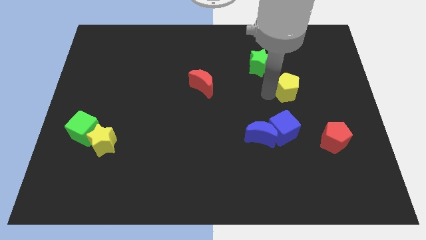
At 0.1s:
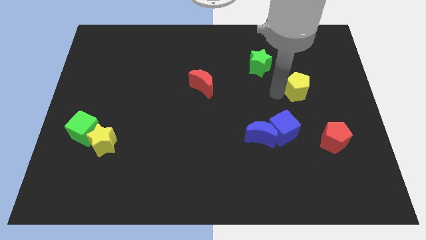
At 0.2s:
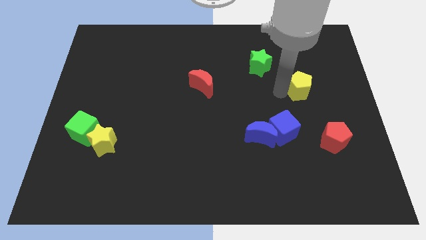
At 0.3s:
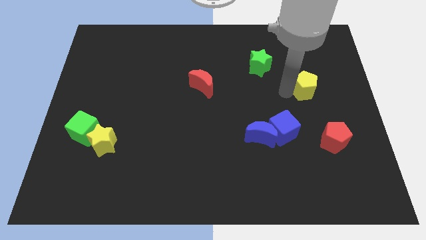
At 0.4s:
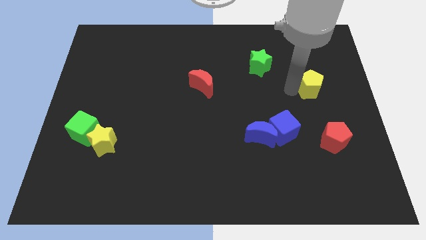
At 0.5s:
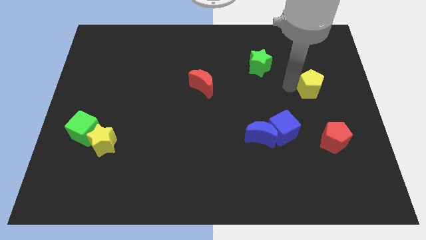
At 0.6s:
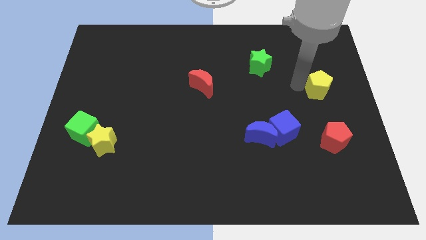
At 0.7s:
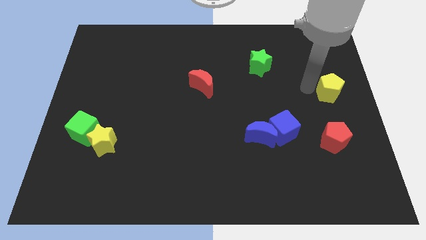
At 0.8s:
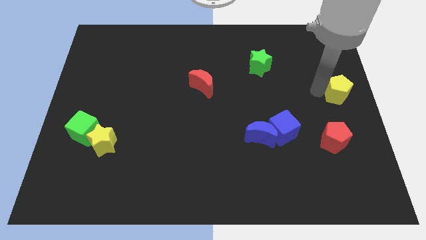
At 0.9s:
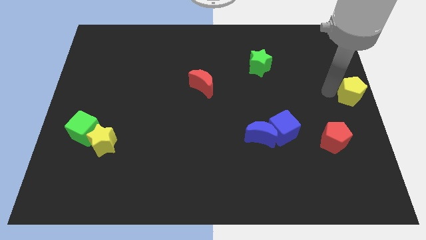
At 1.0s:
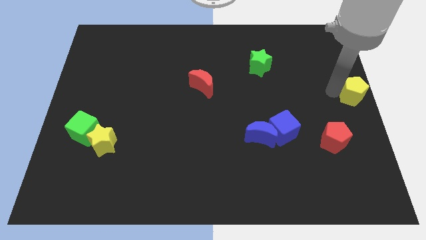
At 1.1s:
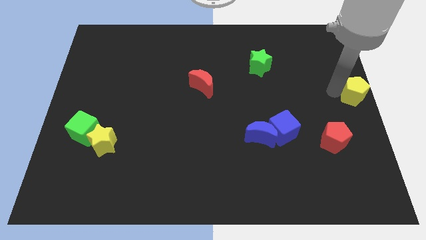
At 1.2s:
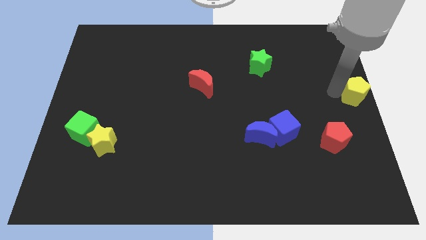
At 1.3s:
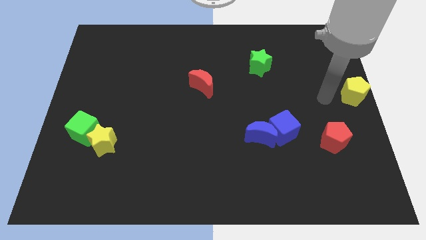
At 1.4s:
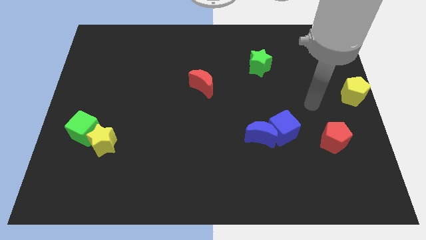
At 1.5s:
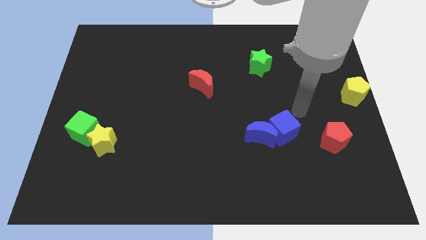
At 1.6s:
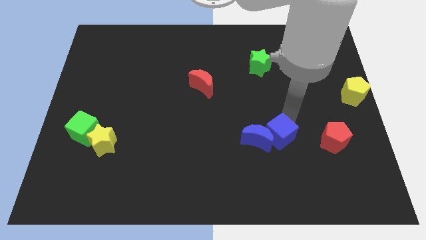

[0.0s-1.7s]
place the yellow pentagon towards the right center of the board

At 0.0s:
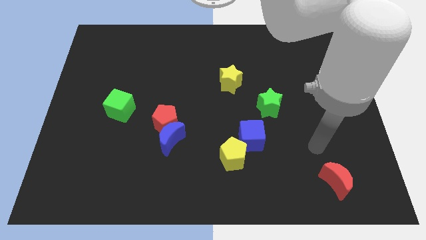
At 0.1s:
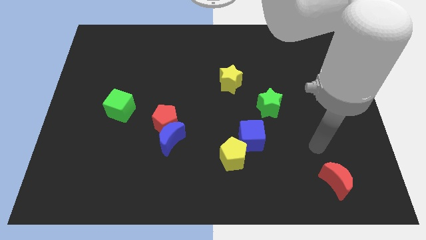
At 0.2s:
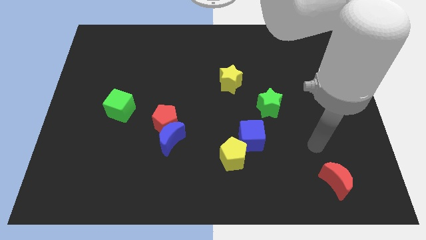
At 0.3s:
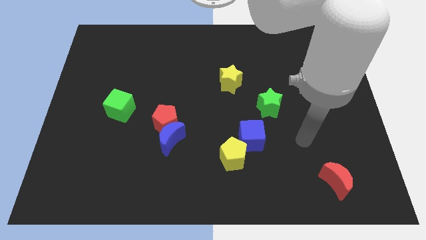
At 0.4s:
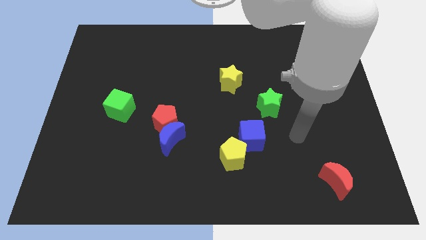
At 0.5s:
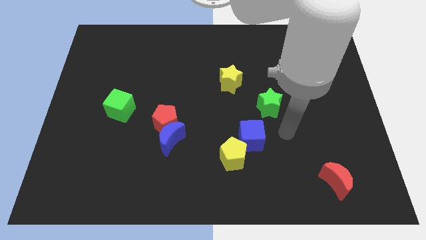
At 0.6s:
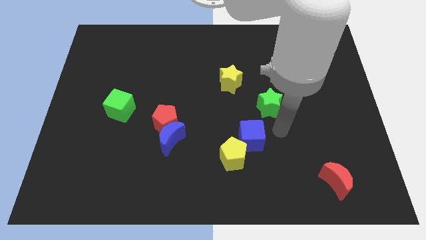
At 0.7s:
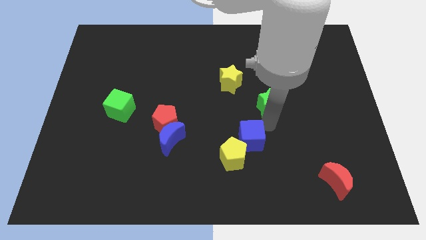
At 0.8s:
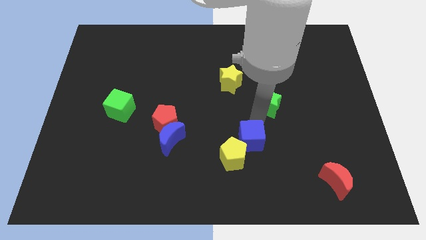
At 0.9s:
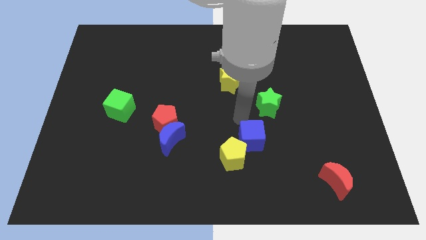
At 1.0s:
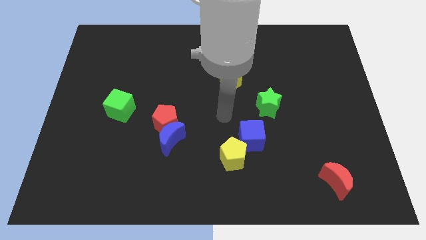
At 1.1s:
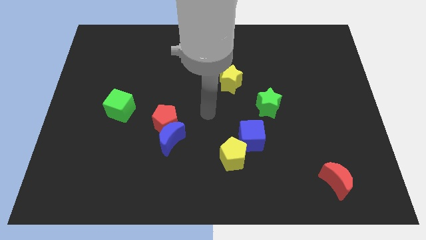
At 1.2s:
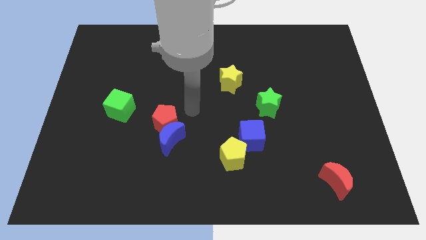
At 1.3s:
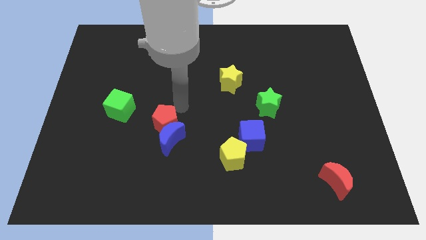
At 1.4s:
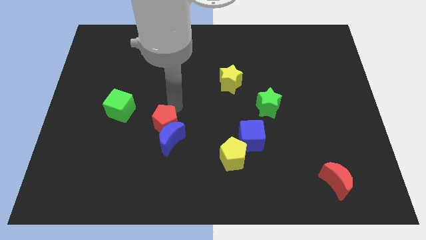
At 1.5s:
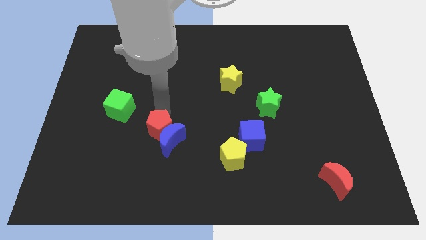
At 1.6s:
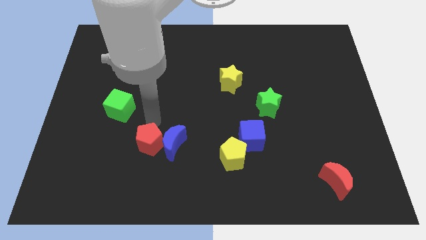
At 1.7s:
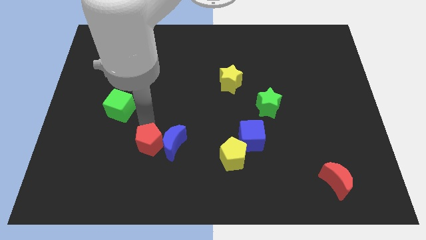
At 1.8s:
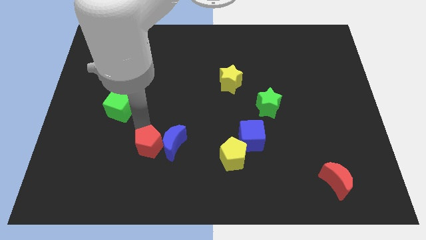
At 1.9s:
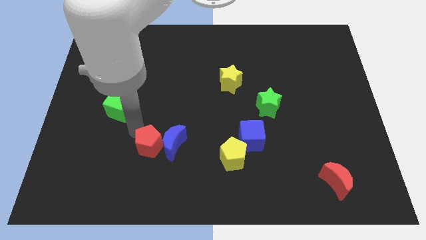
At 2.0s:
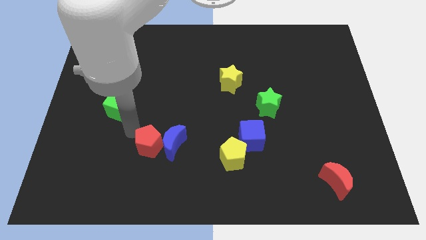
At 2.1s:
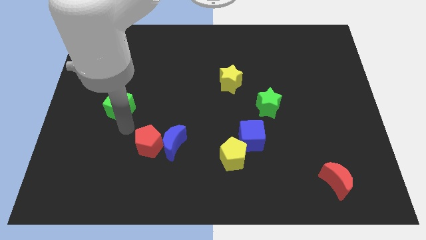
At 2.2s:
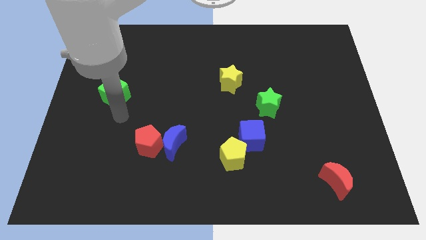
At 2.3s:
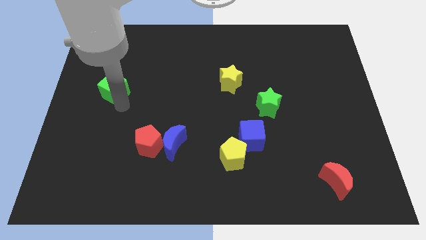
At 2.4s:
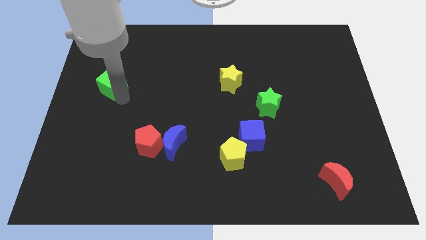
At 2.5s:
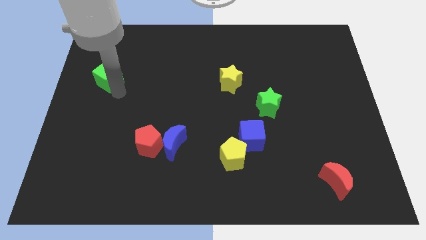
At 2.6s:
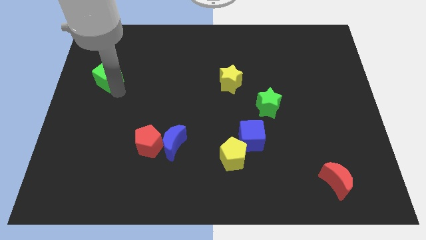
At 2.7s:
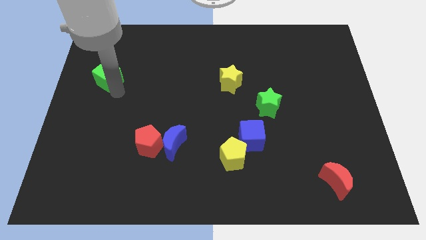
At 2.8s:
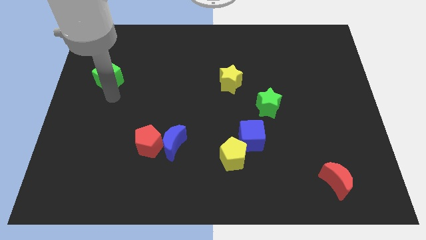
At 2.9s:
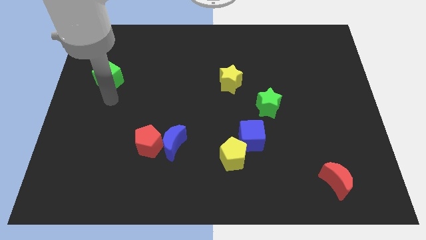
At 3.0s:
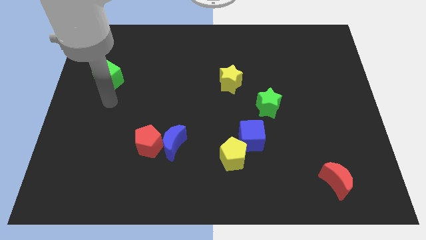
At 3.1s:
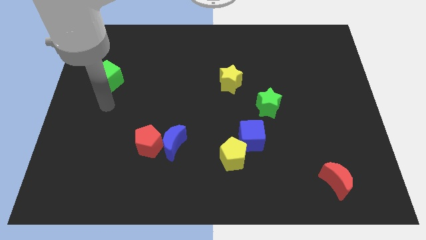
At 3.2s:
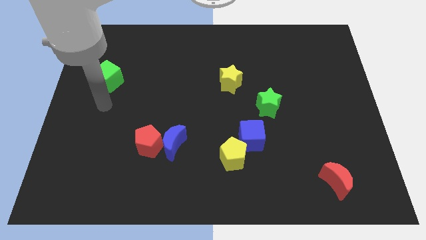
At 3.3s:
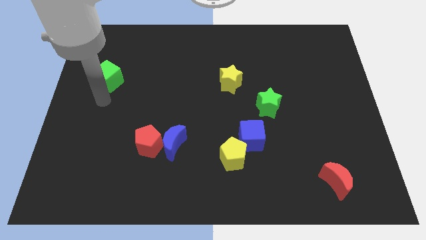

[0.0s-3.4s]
push the red pentagon slightly downwards

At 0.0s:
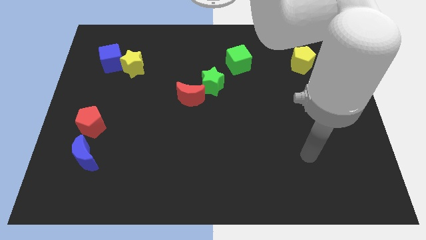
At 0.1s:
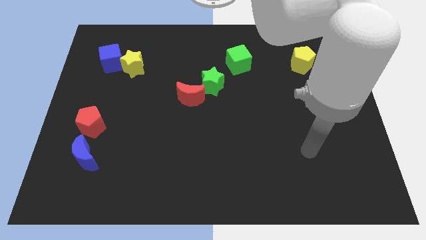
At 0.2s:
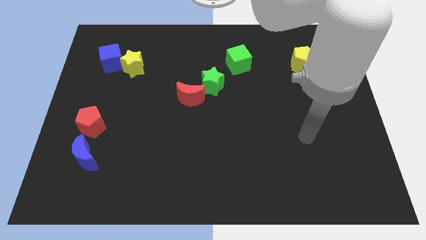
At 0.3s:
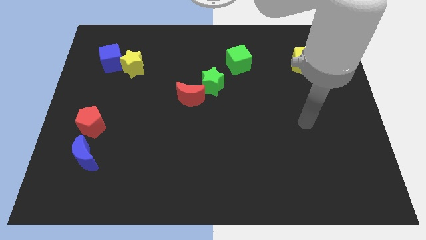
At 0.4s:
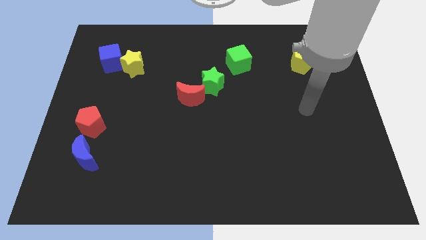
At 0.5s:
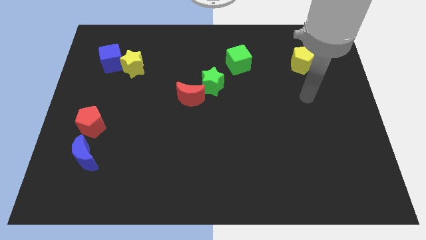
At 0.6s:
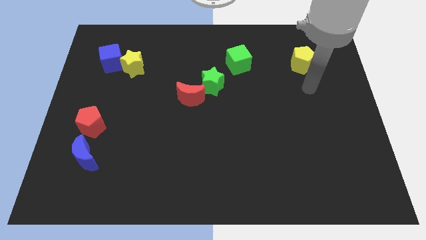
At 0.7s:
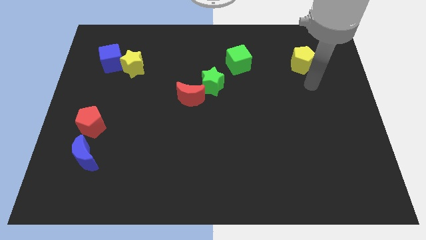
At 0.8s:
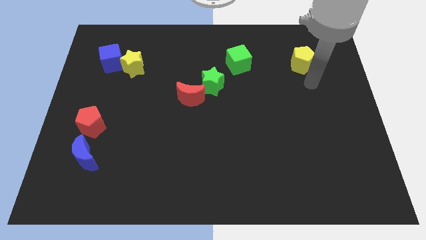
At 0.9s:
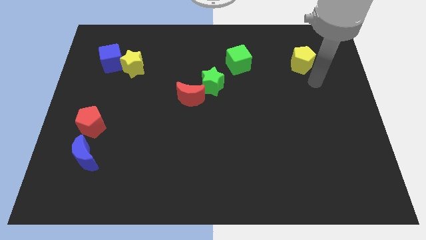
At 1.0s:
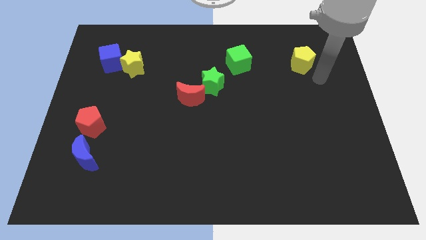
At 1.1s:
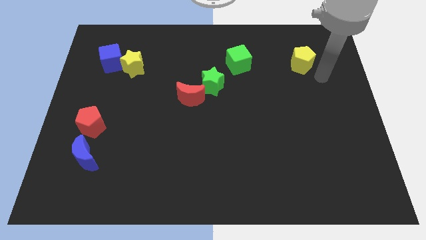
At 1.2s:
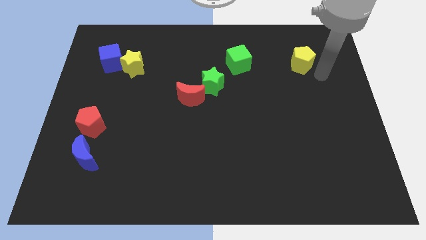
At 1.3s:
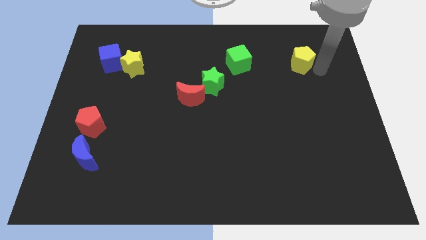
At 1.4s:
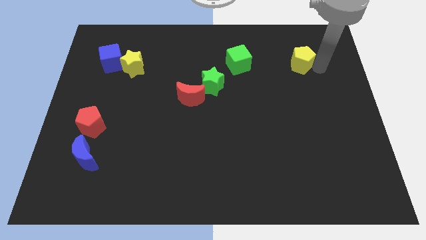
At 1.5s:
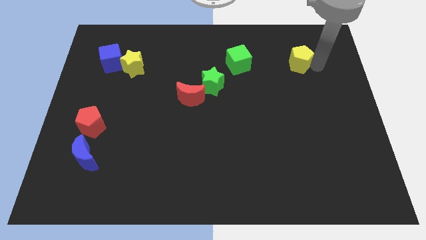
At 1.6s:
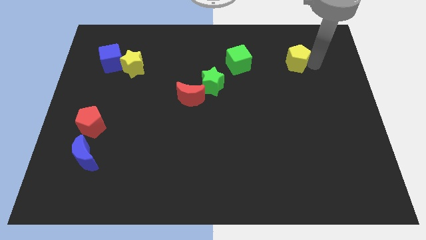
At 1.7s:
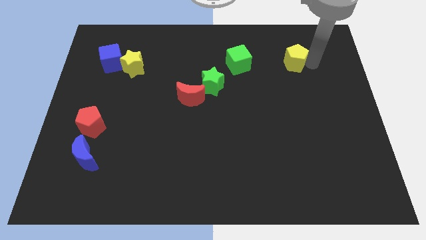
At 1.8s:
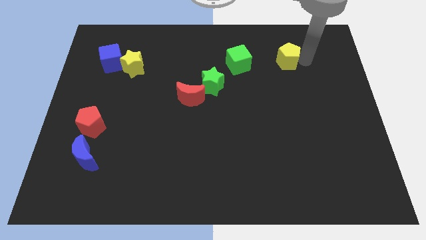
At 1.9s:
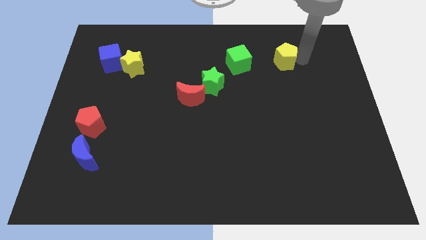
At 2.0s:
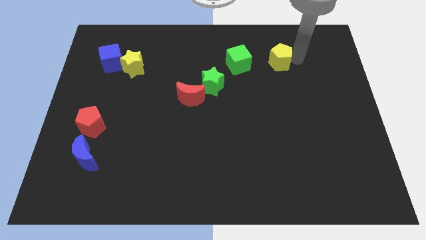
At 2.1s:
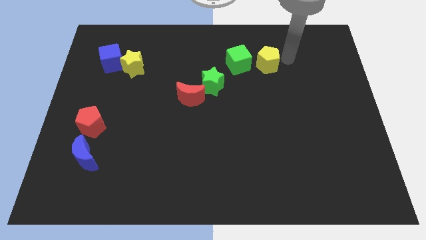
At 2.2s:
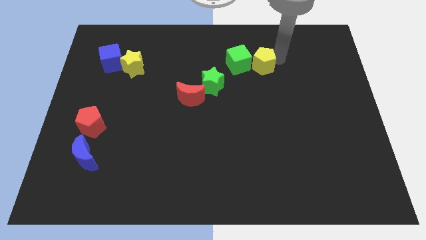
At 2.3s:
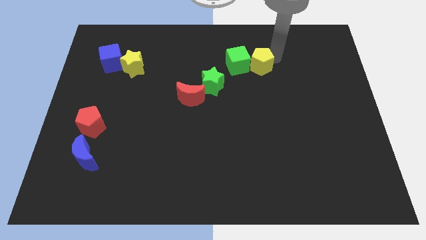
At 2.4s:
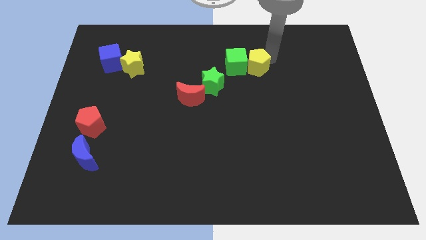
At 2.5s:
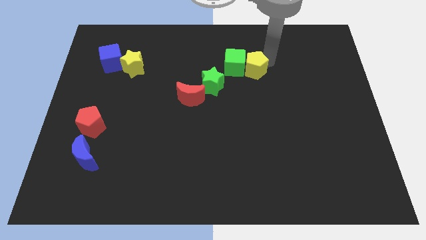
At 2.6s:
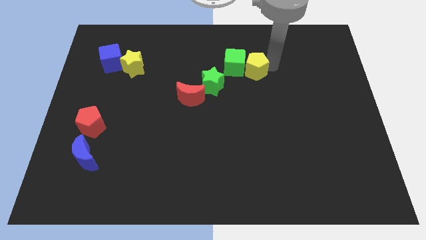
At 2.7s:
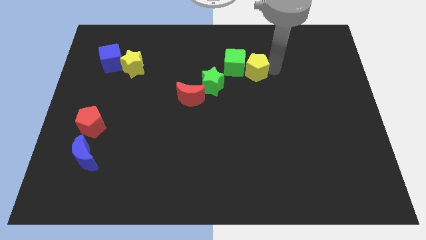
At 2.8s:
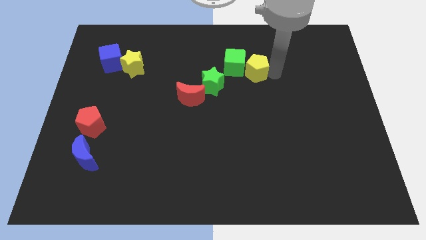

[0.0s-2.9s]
push the yellow pentagon into the green cube

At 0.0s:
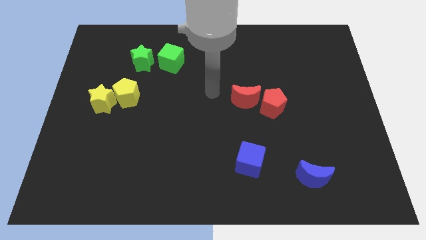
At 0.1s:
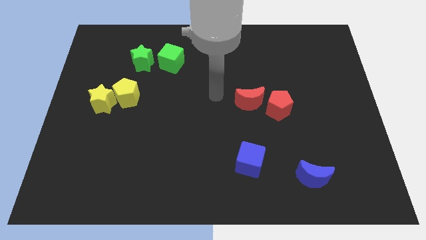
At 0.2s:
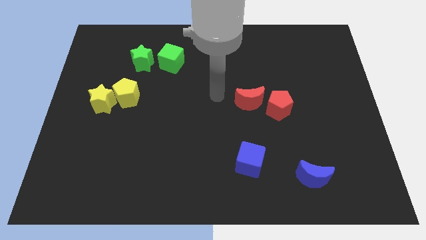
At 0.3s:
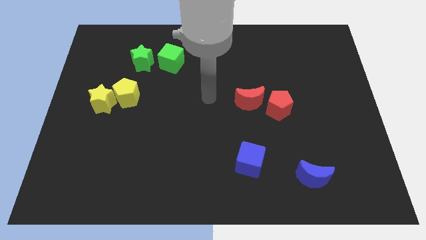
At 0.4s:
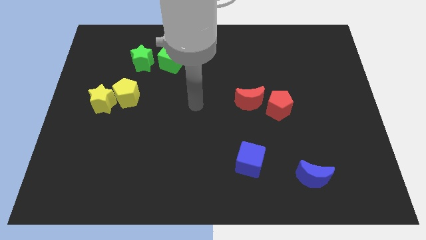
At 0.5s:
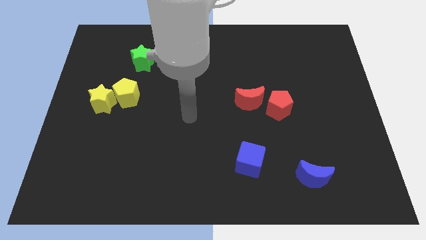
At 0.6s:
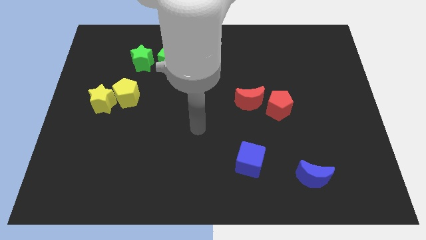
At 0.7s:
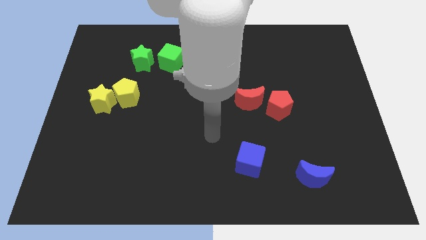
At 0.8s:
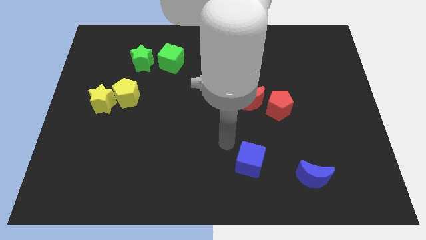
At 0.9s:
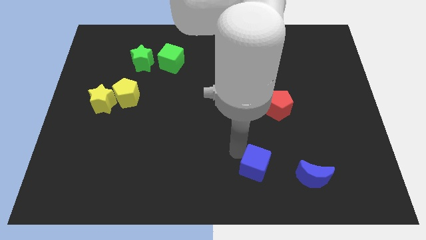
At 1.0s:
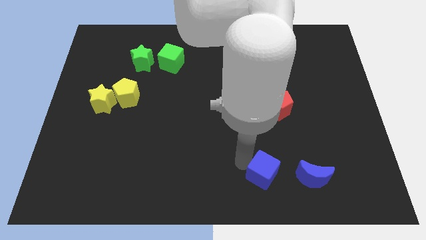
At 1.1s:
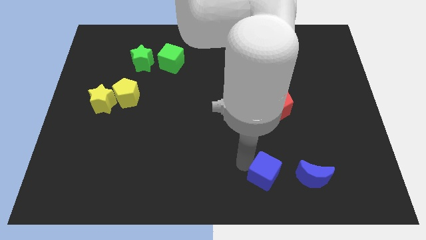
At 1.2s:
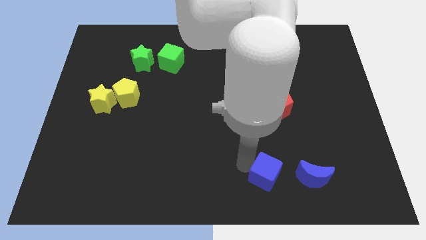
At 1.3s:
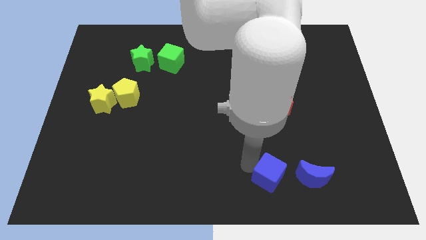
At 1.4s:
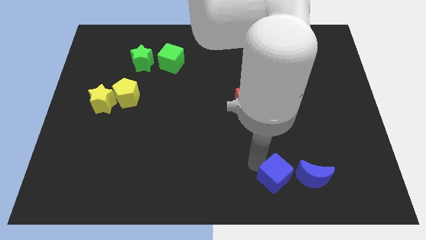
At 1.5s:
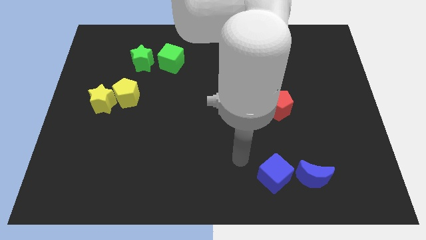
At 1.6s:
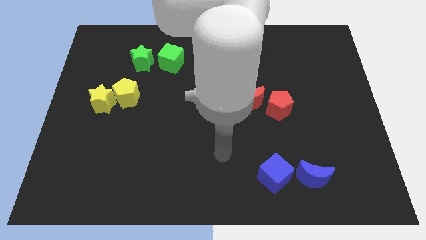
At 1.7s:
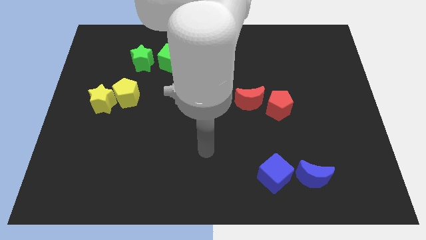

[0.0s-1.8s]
place the blue cube next to the blue moon
